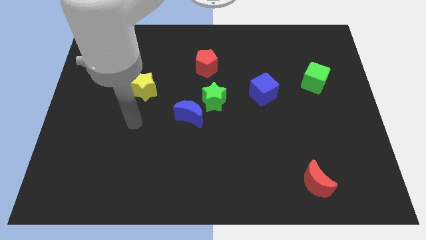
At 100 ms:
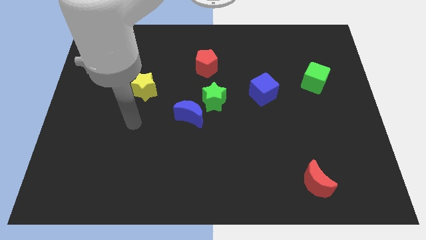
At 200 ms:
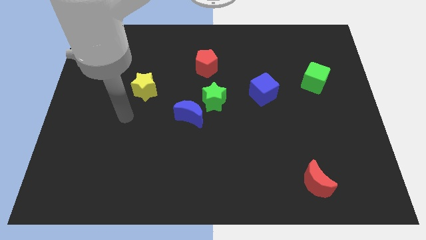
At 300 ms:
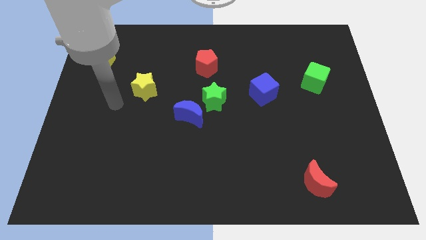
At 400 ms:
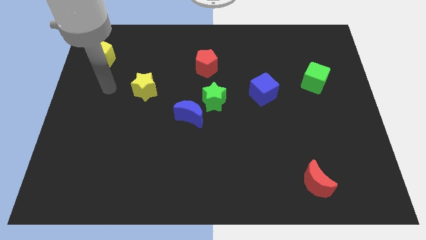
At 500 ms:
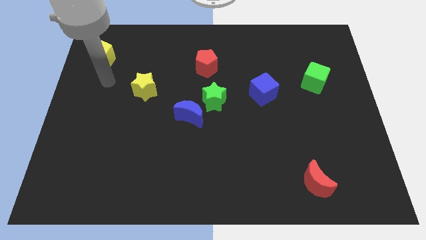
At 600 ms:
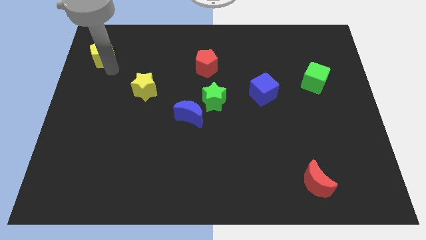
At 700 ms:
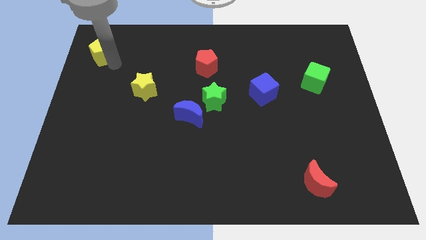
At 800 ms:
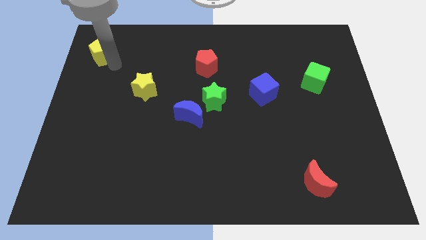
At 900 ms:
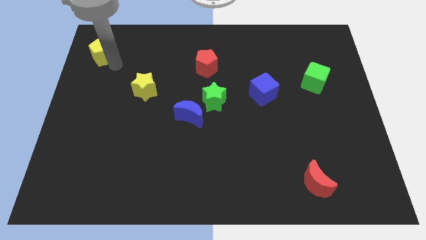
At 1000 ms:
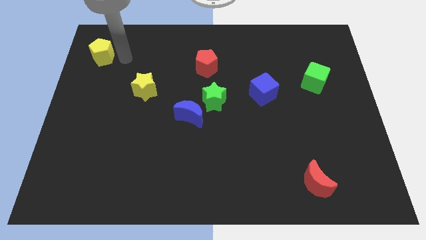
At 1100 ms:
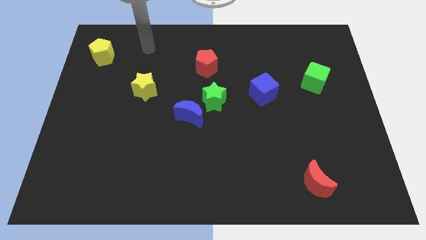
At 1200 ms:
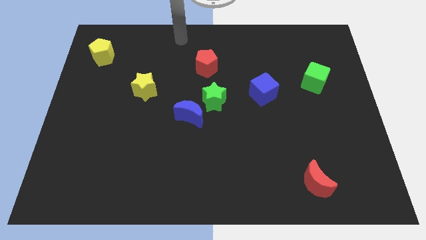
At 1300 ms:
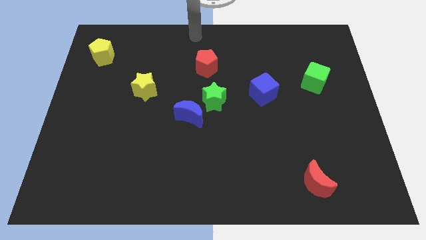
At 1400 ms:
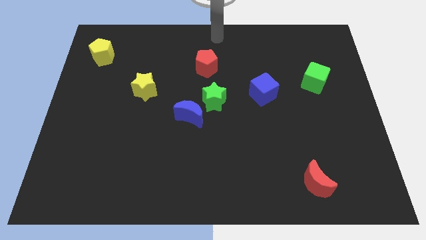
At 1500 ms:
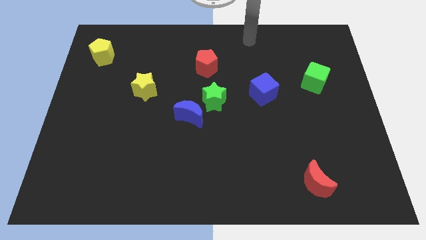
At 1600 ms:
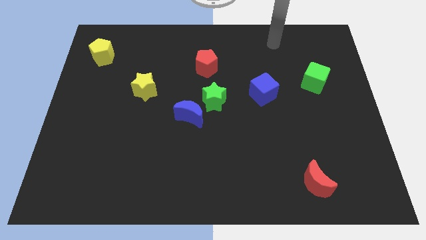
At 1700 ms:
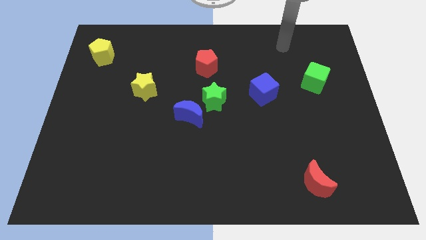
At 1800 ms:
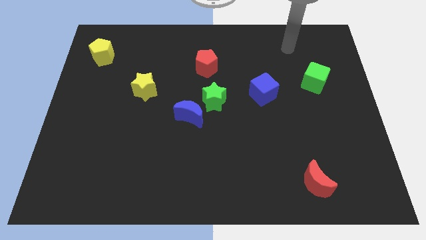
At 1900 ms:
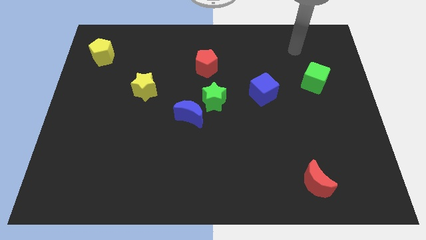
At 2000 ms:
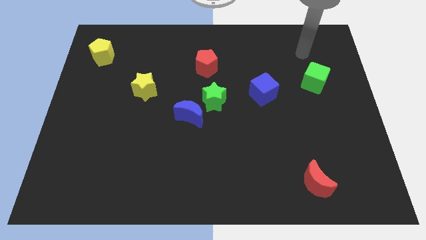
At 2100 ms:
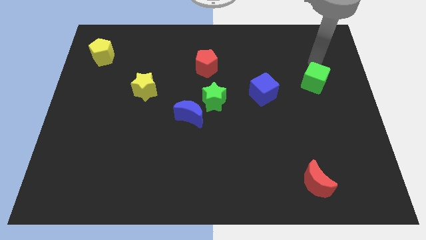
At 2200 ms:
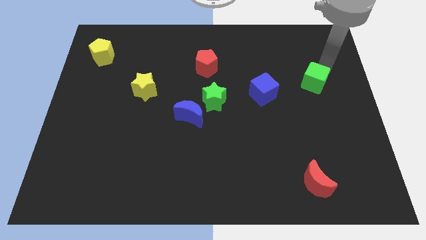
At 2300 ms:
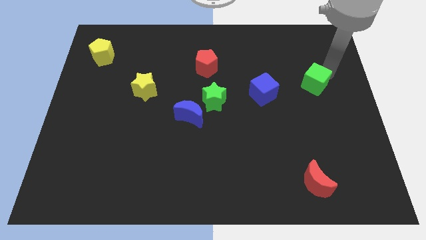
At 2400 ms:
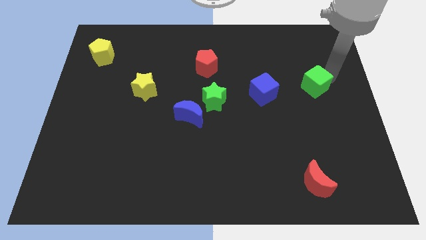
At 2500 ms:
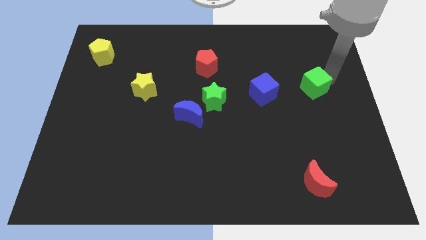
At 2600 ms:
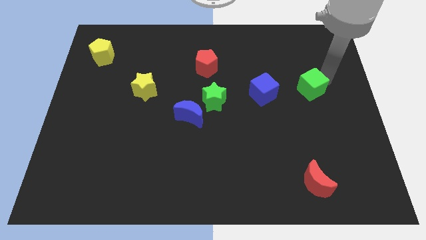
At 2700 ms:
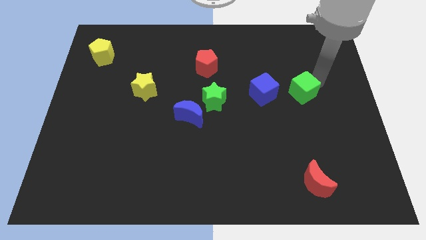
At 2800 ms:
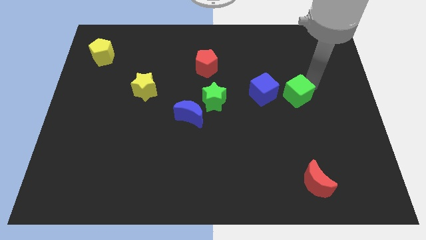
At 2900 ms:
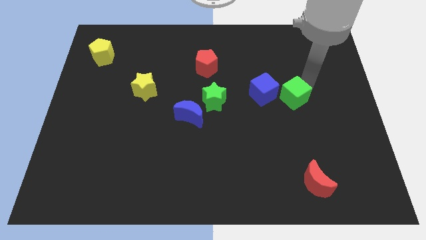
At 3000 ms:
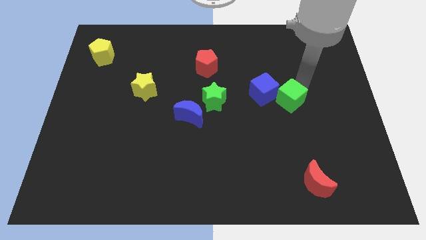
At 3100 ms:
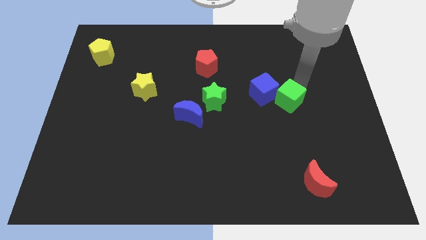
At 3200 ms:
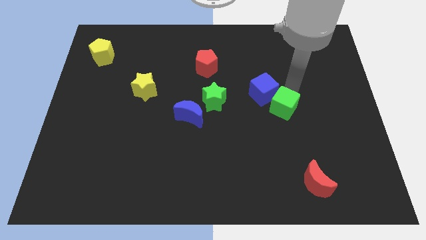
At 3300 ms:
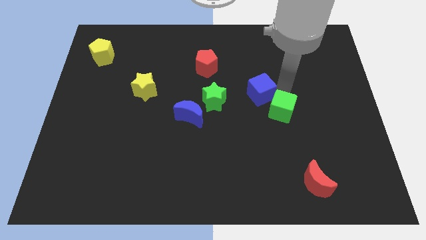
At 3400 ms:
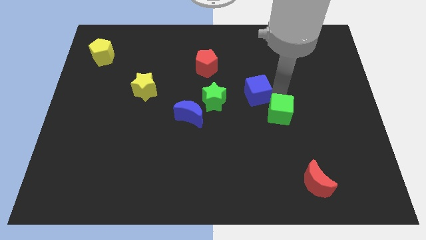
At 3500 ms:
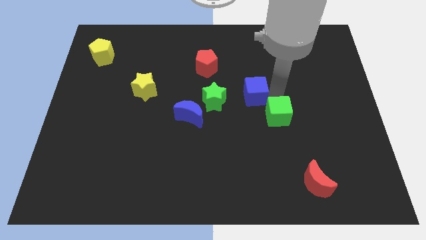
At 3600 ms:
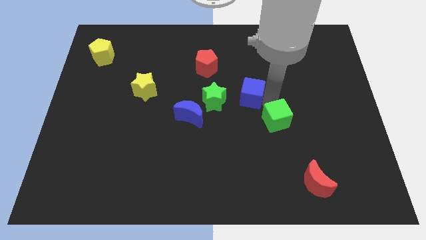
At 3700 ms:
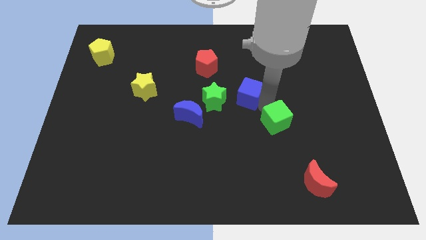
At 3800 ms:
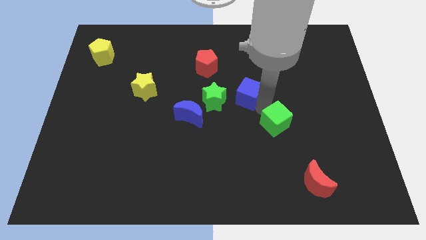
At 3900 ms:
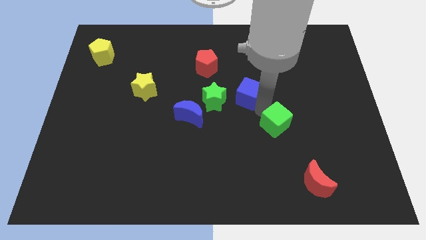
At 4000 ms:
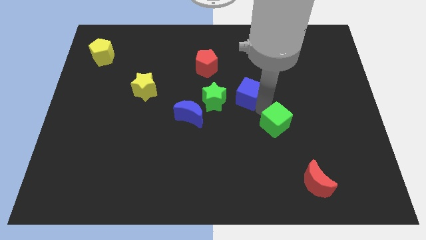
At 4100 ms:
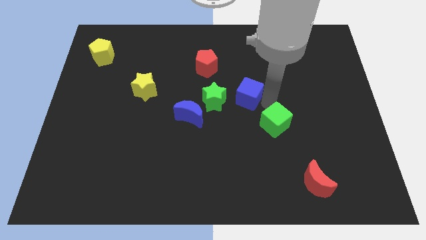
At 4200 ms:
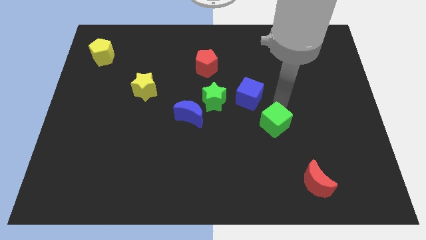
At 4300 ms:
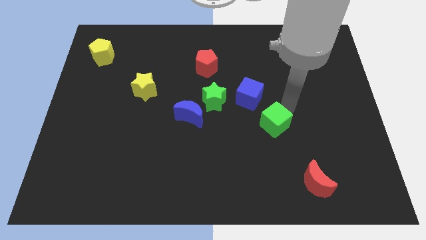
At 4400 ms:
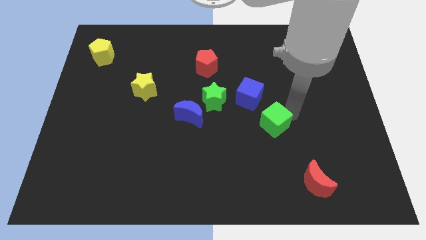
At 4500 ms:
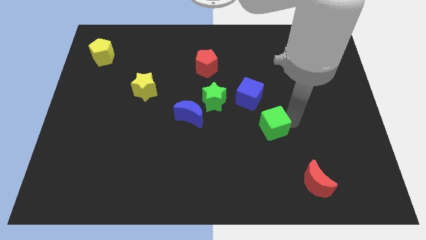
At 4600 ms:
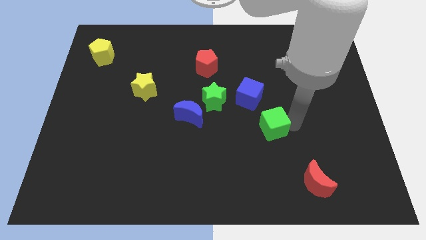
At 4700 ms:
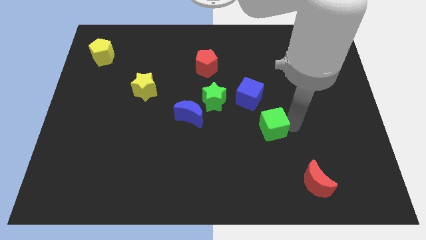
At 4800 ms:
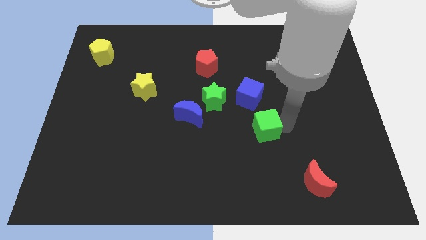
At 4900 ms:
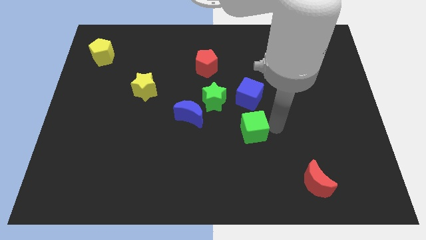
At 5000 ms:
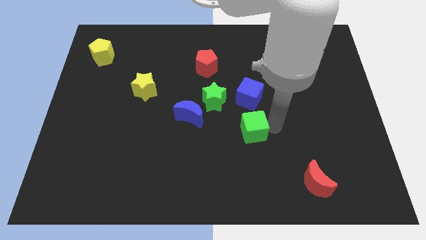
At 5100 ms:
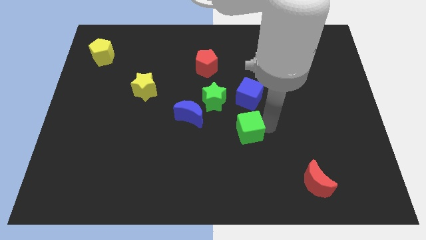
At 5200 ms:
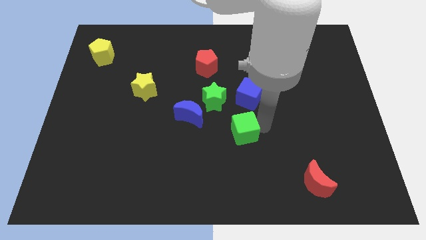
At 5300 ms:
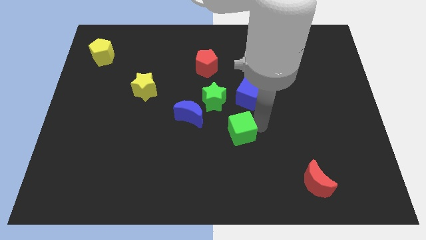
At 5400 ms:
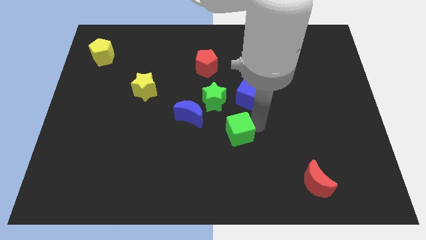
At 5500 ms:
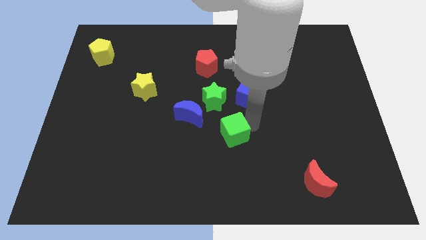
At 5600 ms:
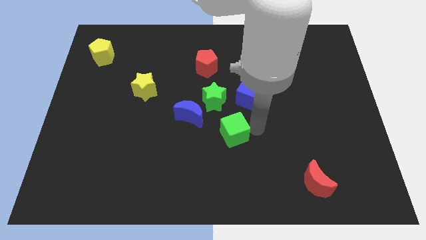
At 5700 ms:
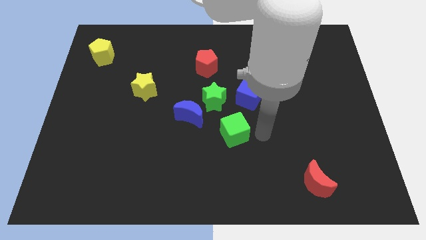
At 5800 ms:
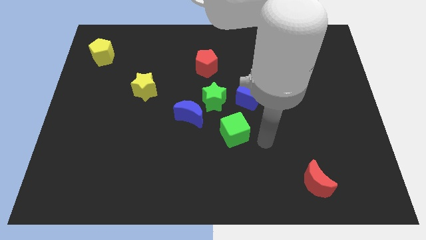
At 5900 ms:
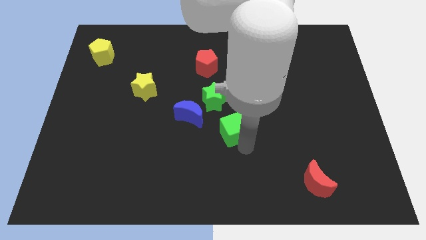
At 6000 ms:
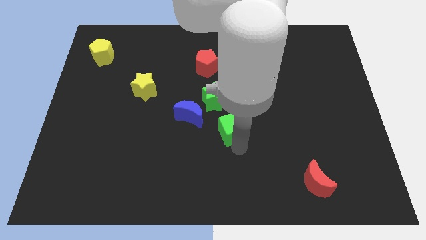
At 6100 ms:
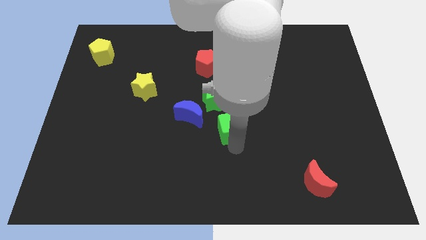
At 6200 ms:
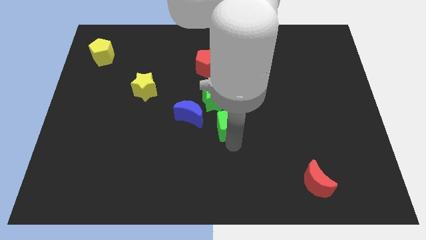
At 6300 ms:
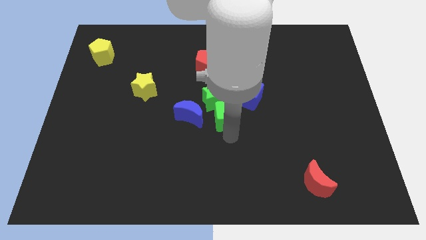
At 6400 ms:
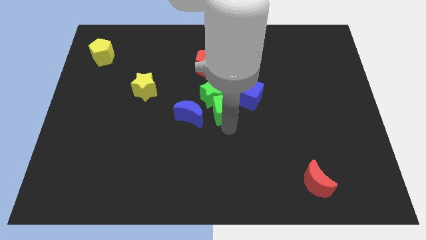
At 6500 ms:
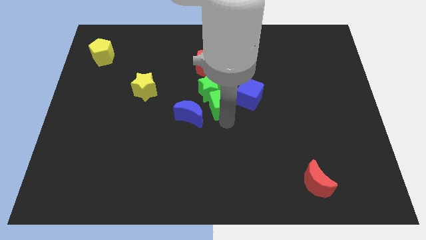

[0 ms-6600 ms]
move the green cube towards the green star

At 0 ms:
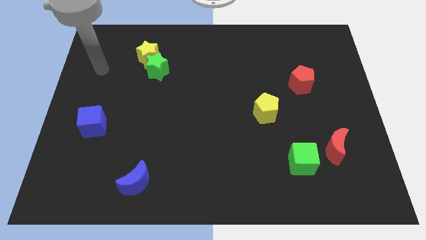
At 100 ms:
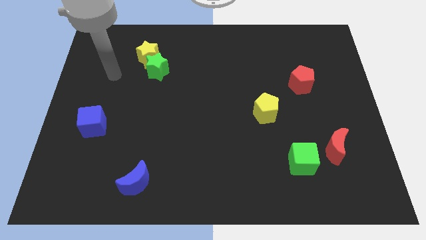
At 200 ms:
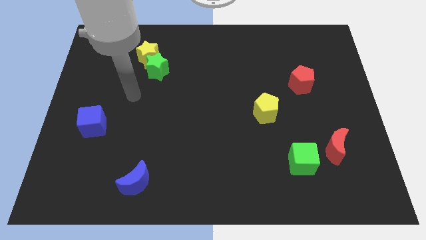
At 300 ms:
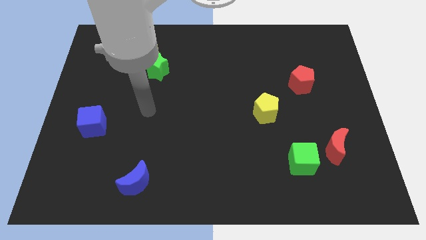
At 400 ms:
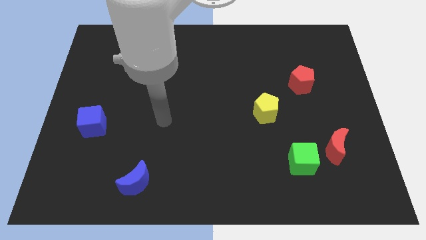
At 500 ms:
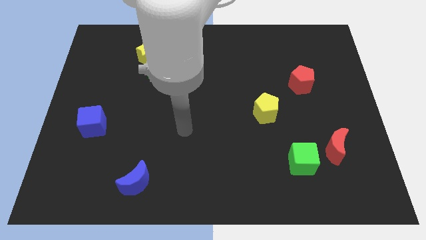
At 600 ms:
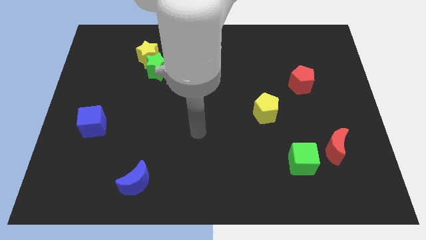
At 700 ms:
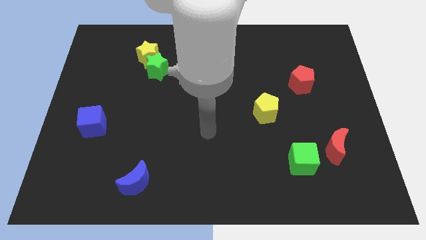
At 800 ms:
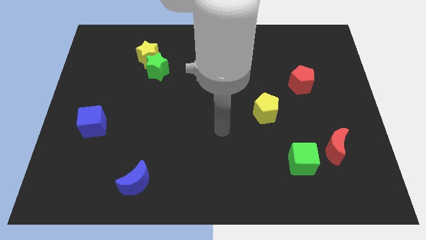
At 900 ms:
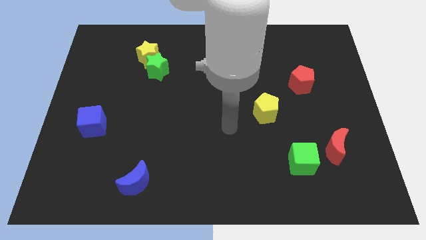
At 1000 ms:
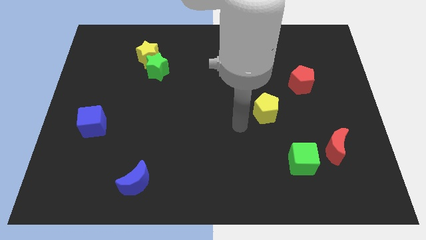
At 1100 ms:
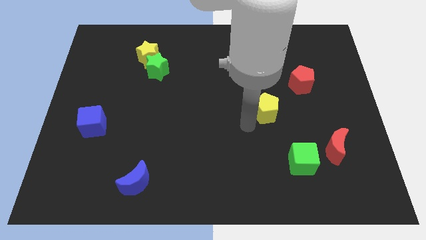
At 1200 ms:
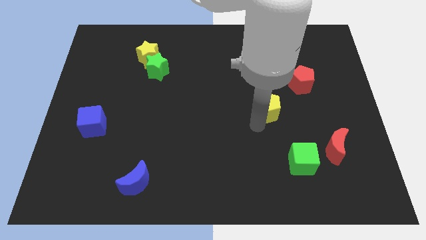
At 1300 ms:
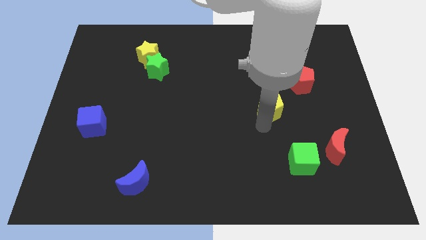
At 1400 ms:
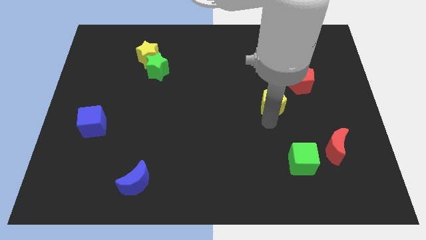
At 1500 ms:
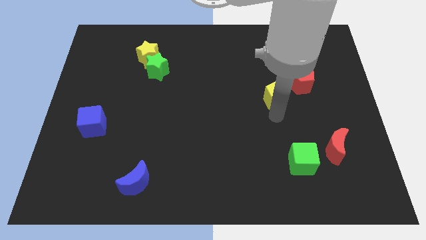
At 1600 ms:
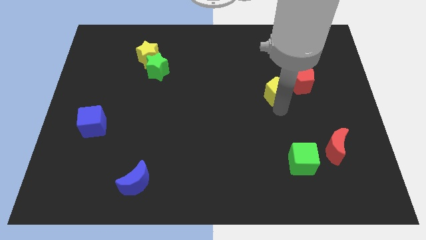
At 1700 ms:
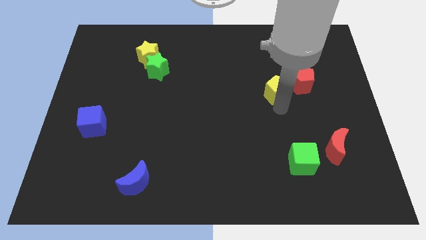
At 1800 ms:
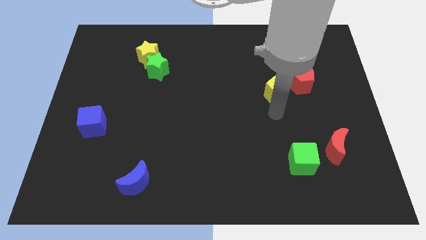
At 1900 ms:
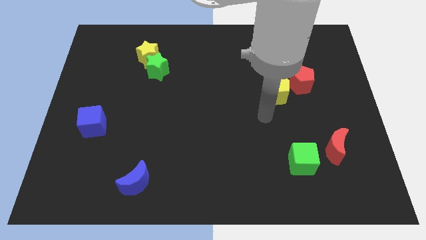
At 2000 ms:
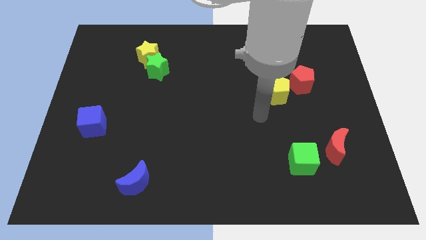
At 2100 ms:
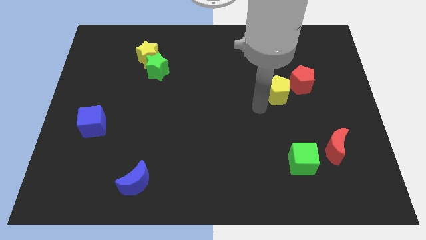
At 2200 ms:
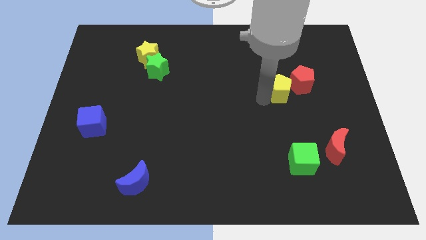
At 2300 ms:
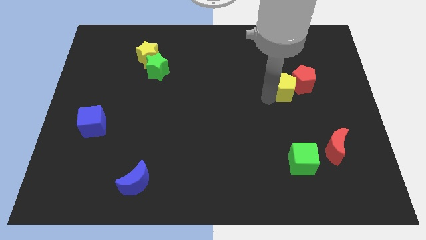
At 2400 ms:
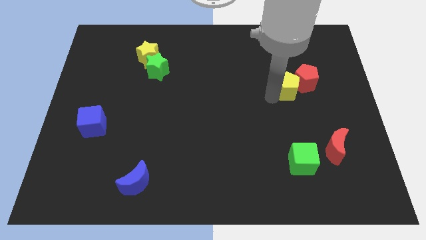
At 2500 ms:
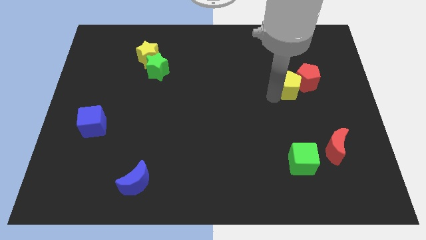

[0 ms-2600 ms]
put the yellow pentagon close to the red pentagon
